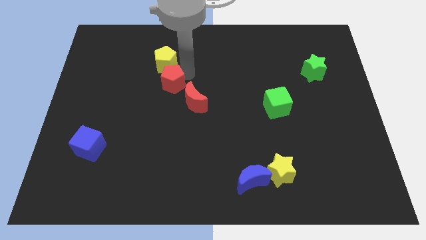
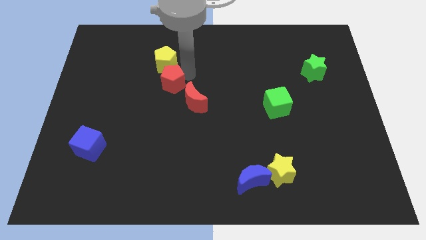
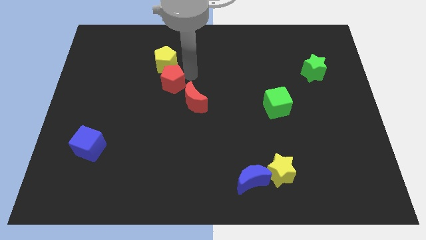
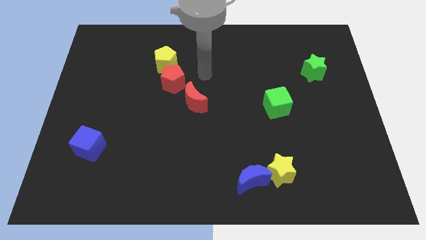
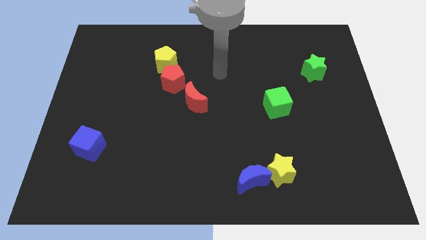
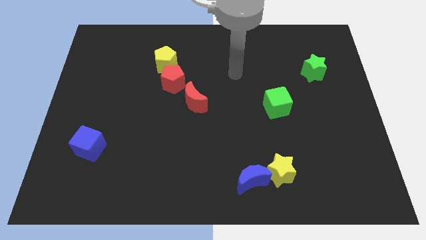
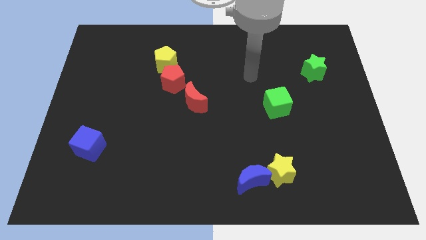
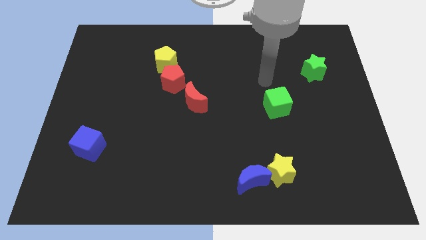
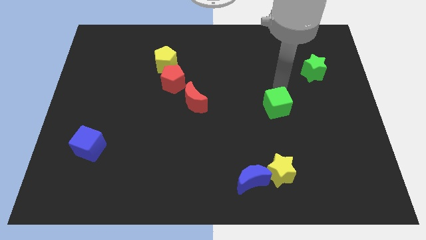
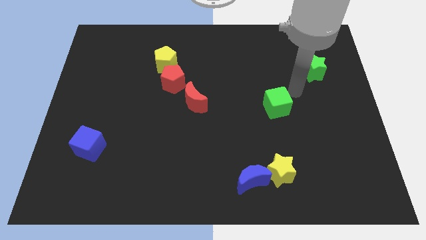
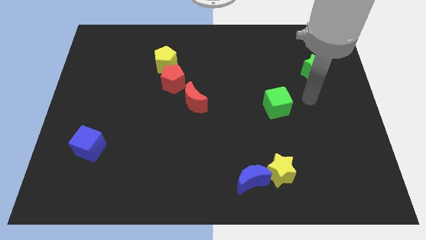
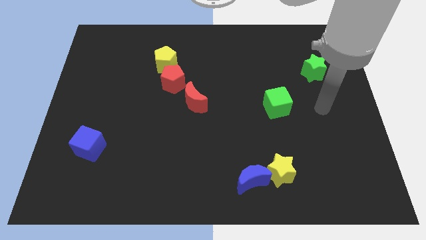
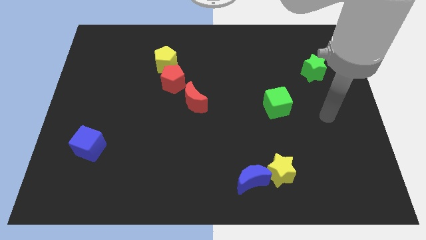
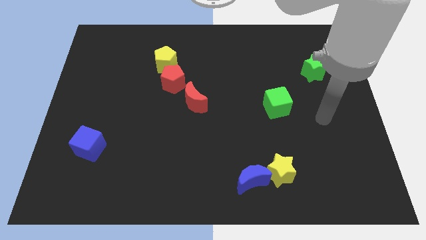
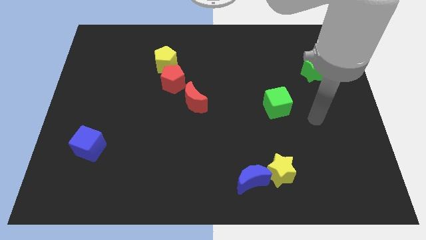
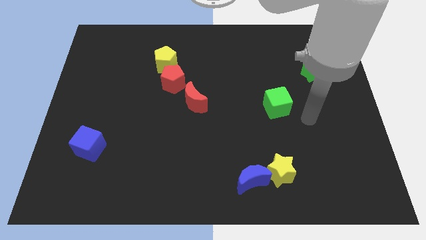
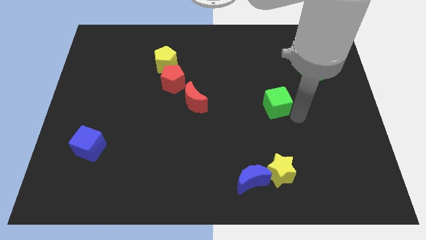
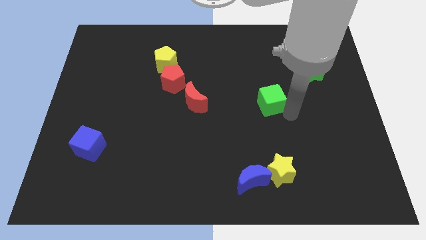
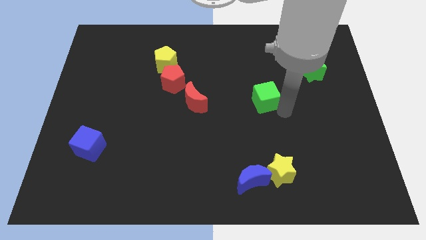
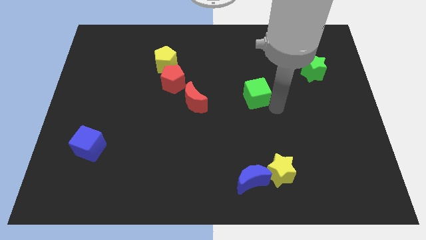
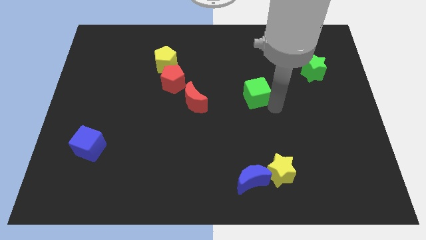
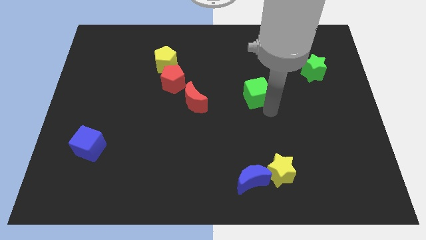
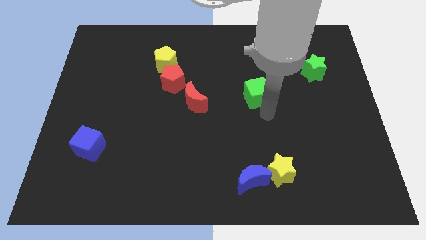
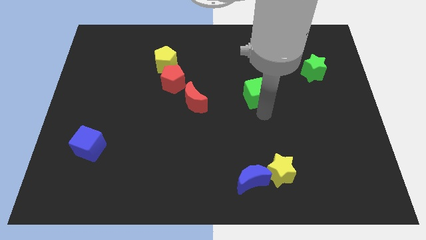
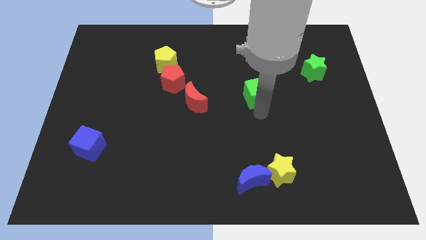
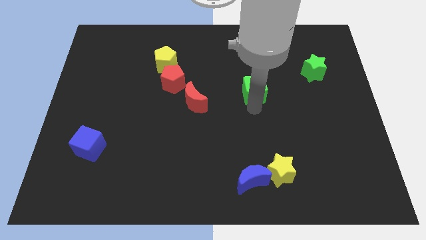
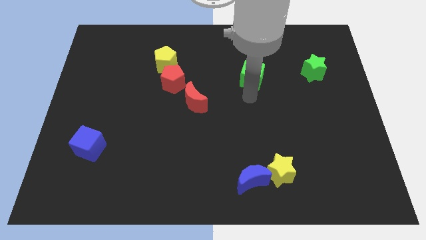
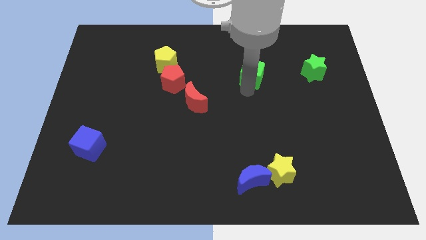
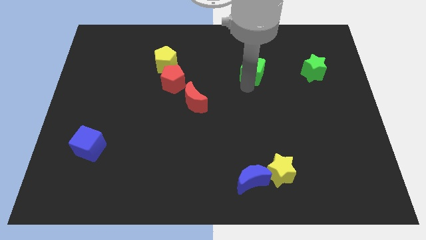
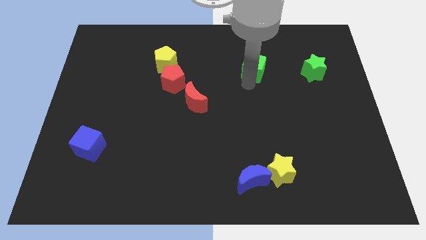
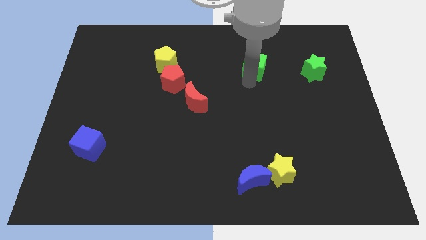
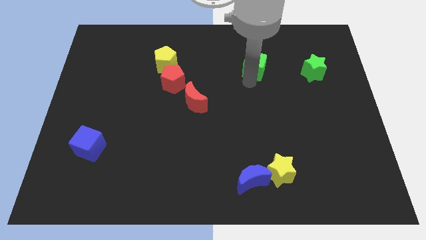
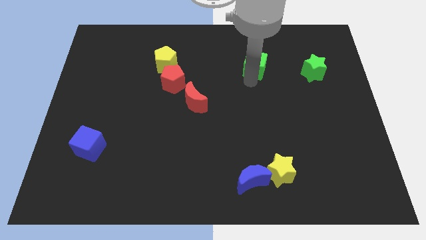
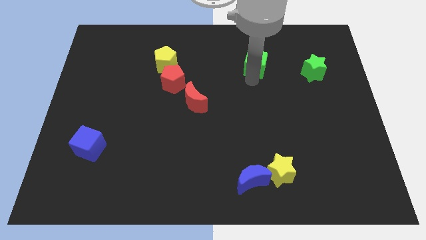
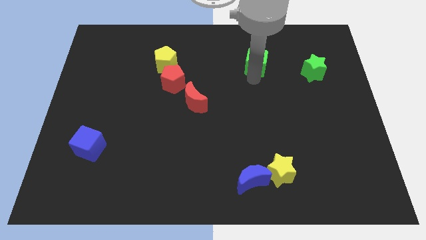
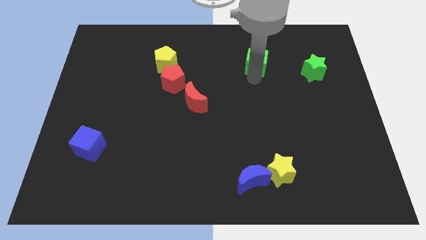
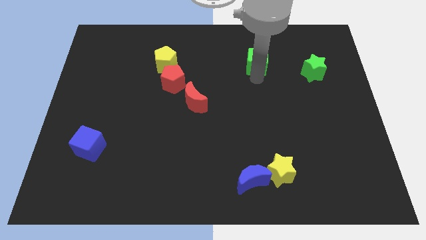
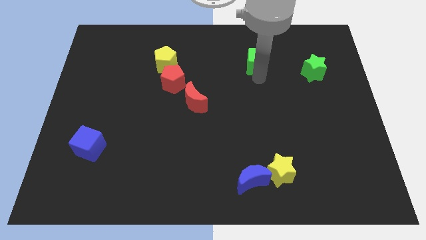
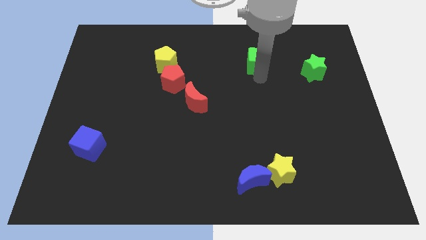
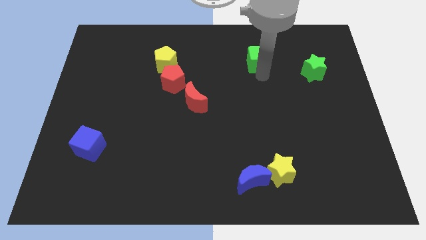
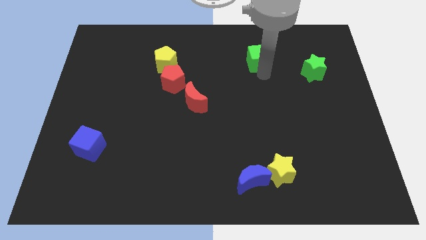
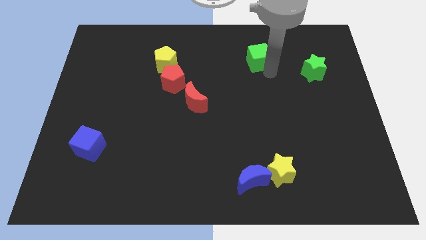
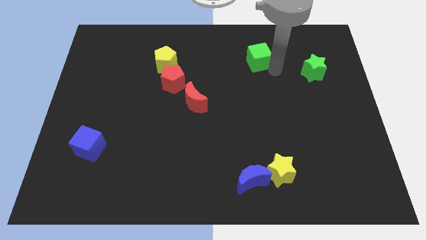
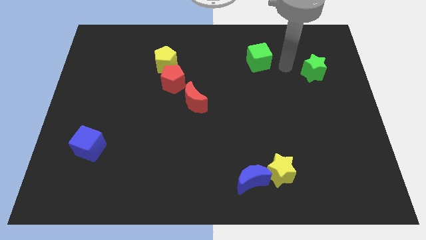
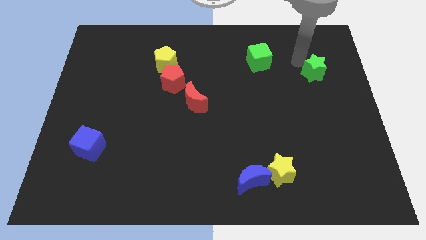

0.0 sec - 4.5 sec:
slightly push the green cube upwards

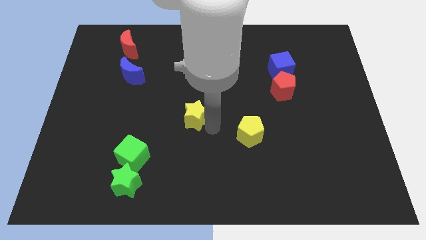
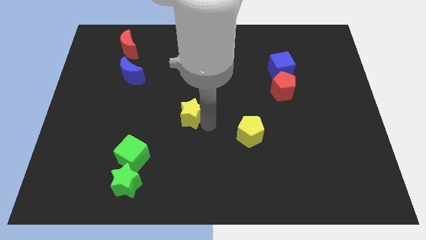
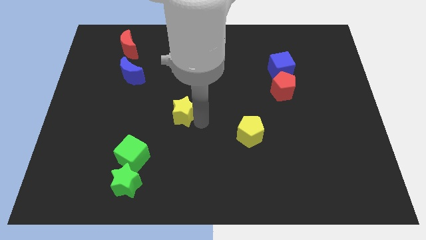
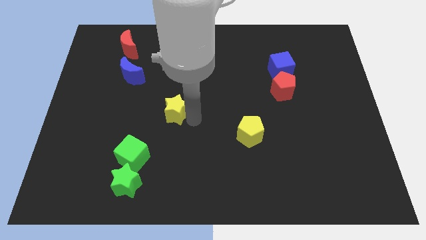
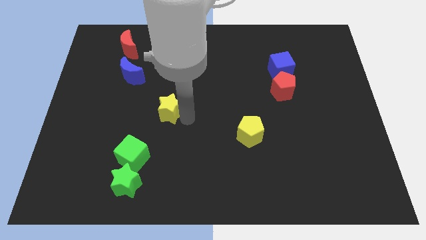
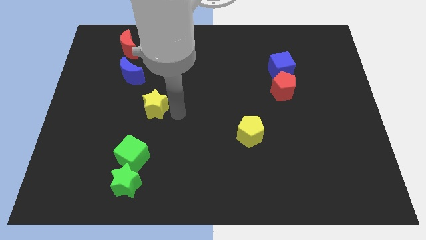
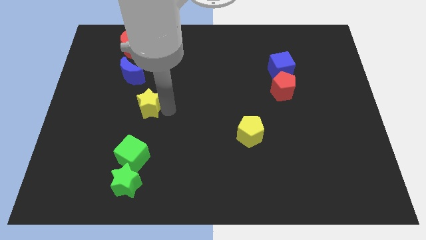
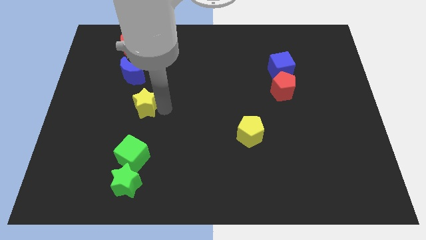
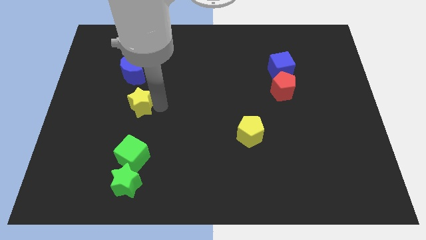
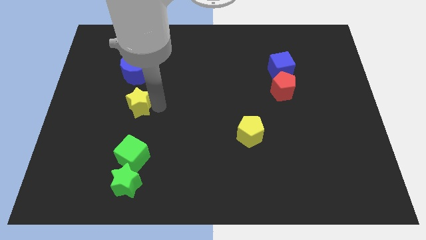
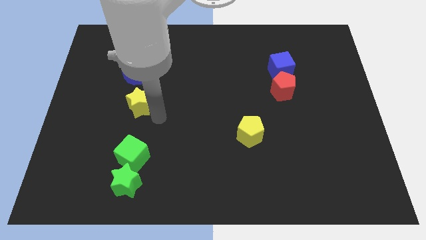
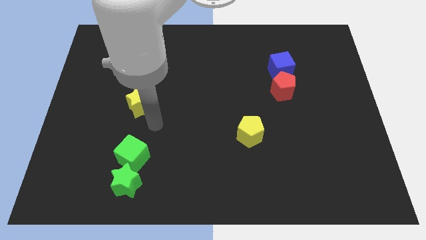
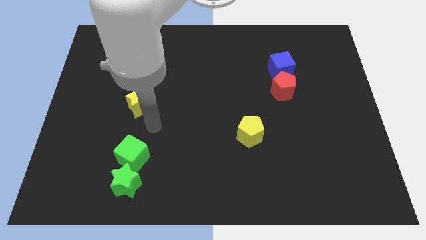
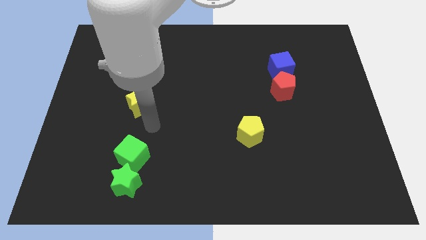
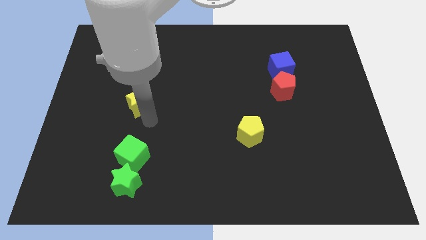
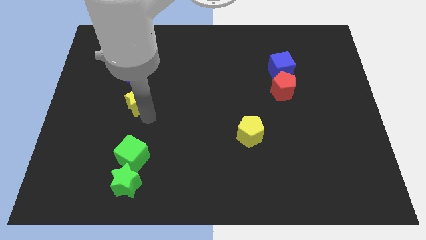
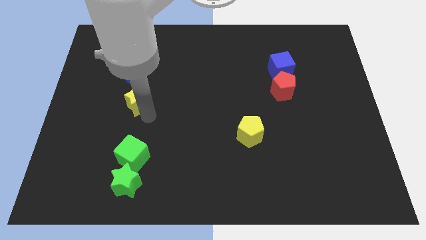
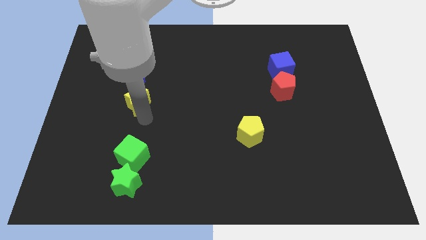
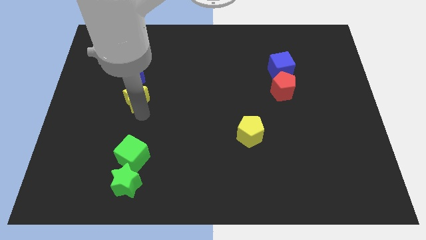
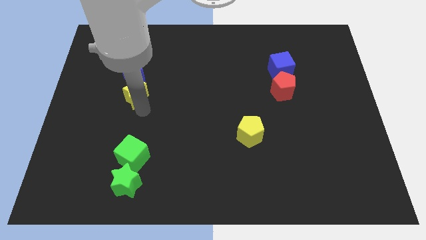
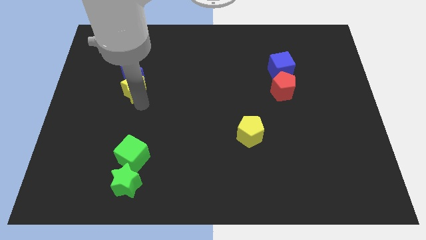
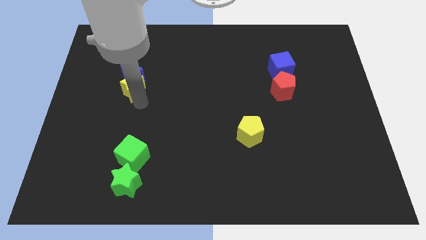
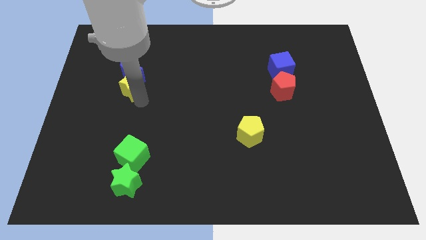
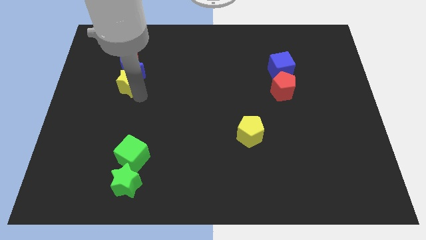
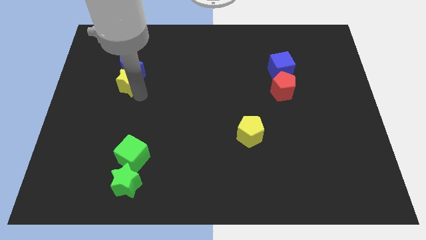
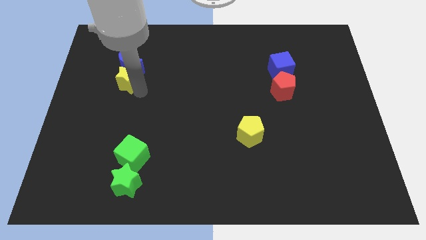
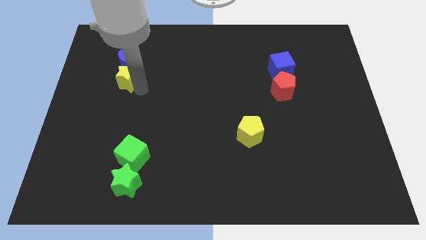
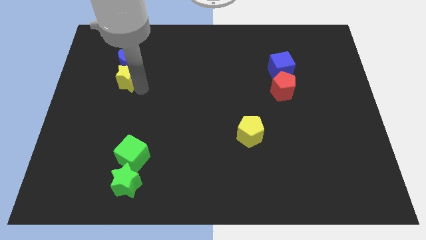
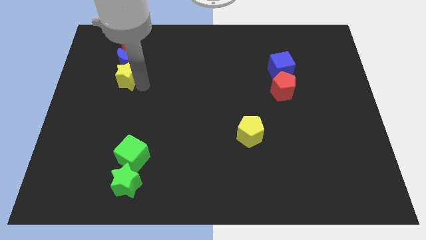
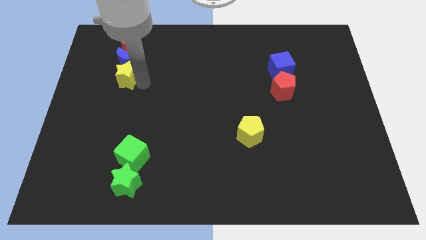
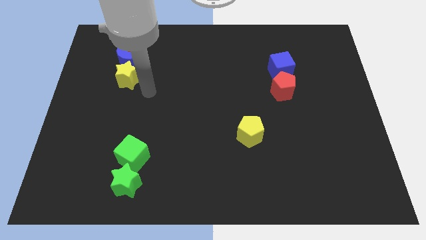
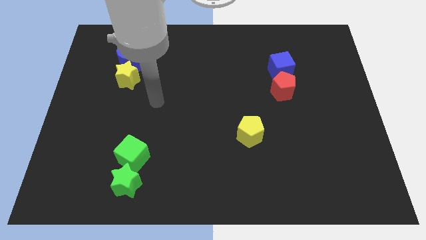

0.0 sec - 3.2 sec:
put the yellow star below the blue moon

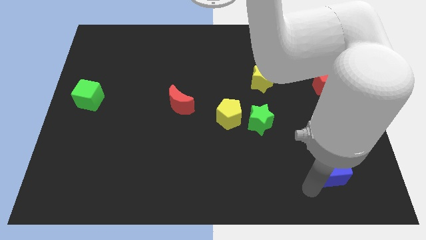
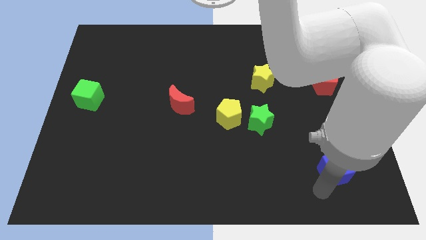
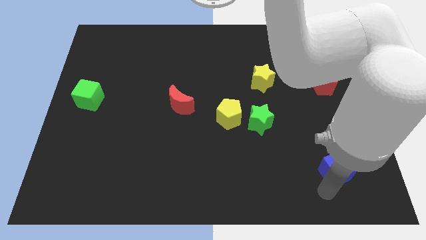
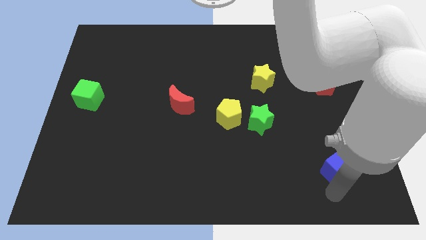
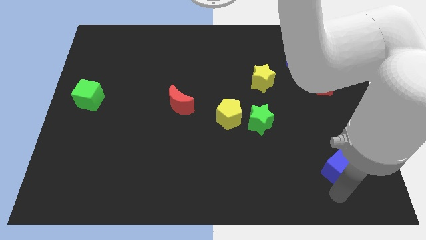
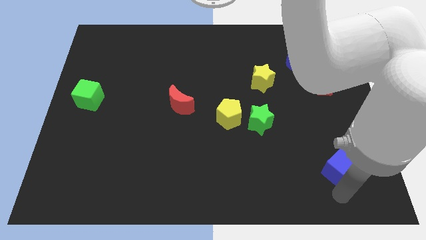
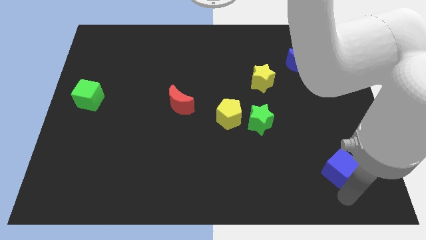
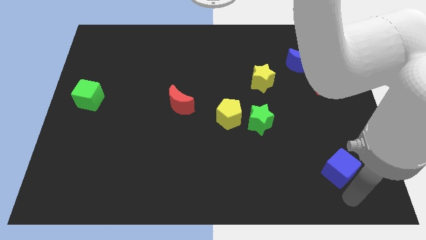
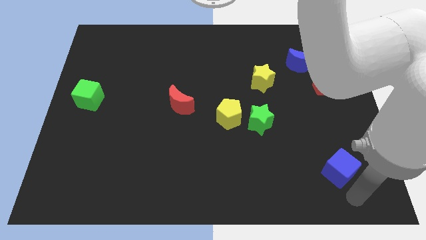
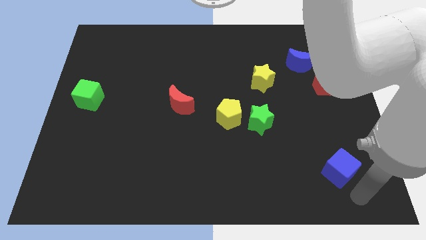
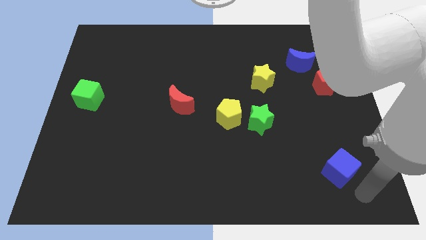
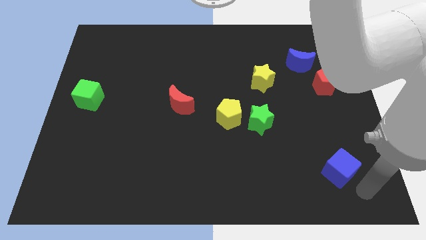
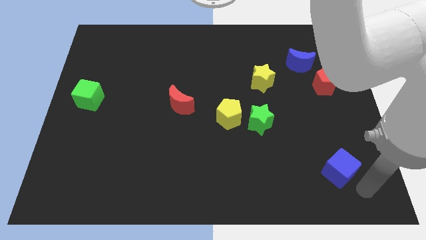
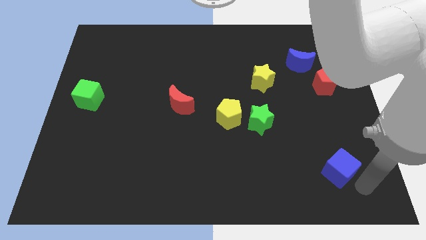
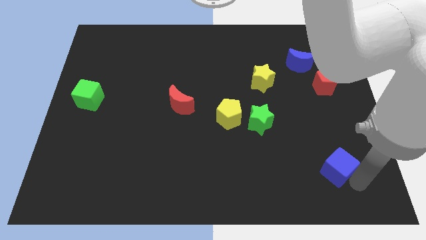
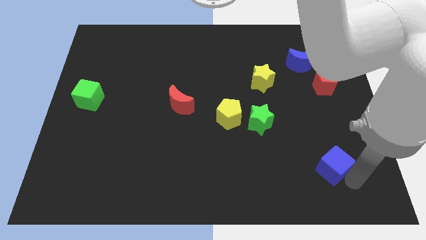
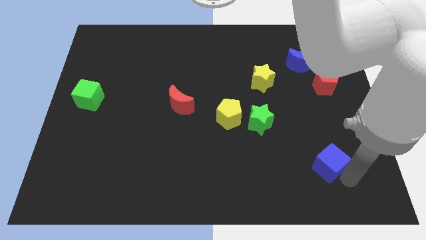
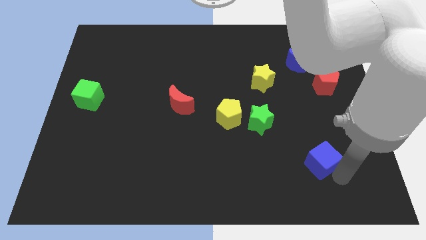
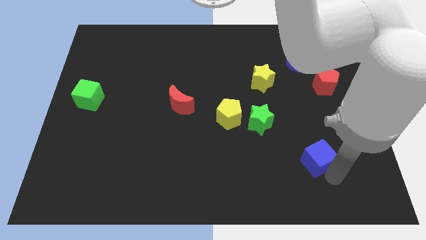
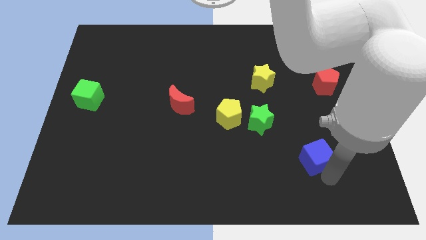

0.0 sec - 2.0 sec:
tap the blue cube on the bottom side
